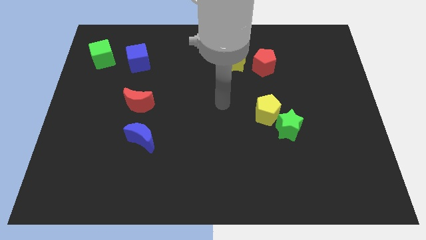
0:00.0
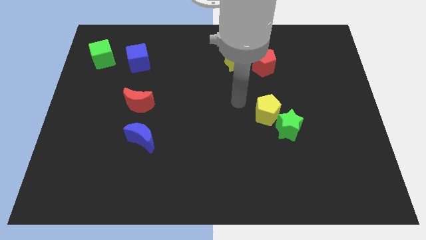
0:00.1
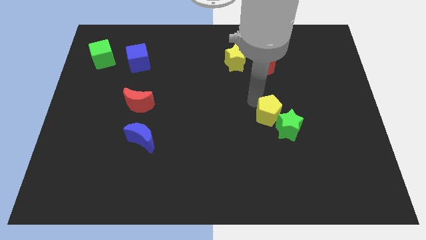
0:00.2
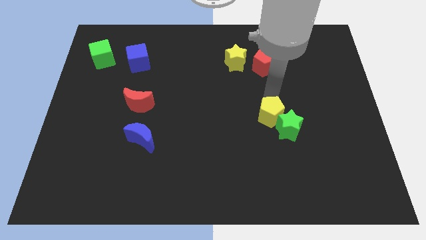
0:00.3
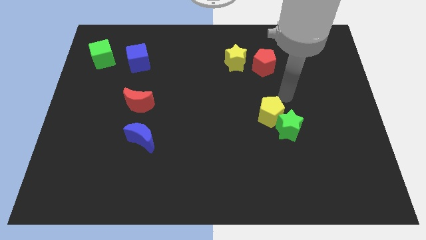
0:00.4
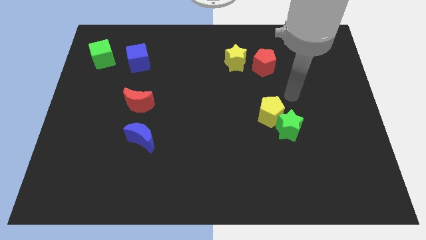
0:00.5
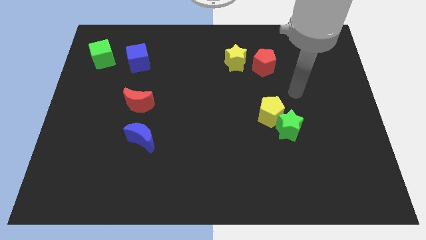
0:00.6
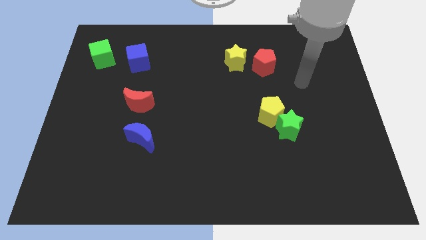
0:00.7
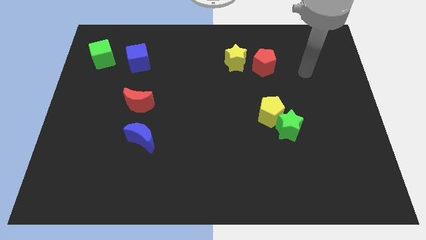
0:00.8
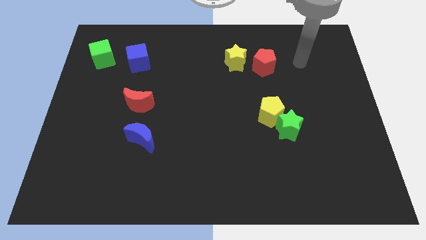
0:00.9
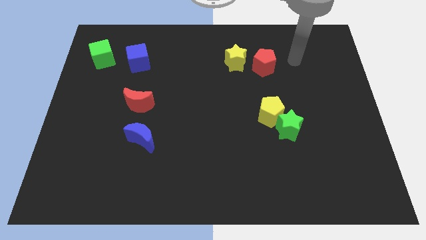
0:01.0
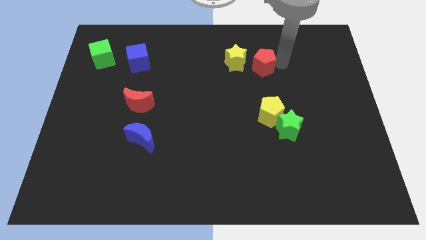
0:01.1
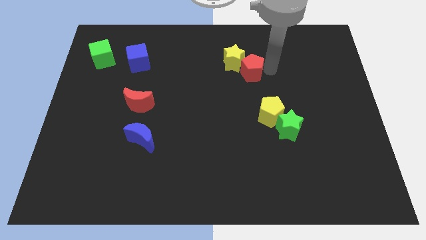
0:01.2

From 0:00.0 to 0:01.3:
move the arm towards the red pentagon

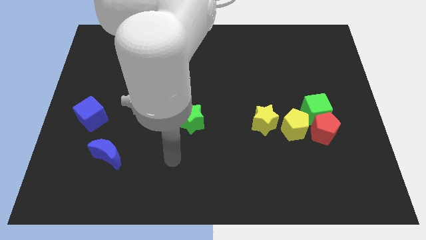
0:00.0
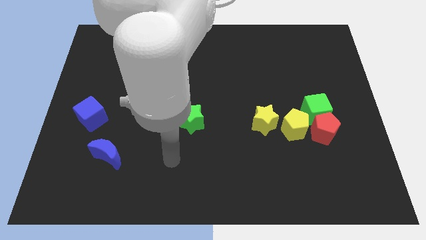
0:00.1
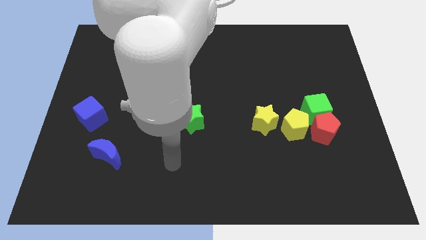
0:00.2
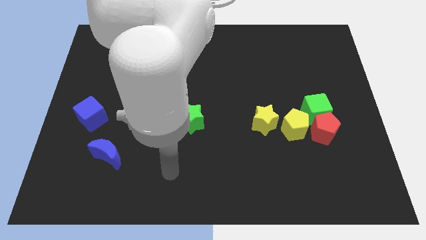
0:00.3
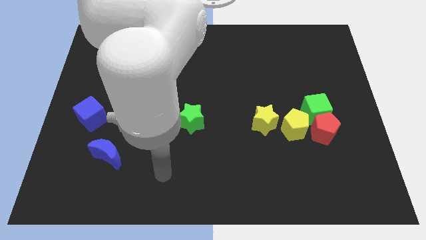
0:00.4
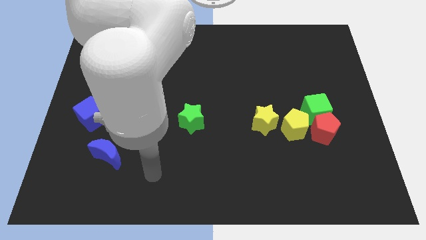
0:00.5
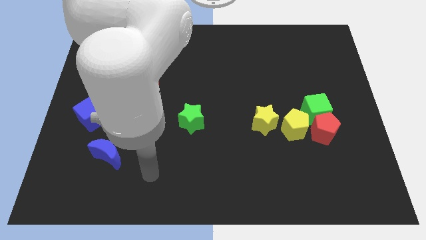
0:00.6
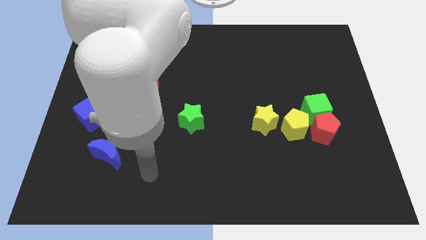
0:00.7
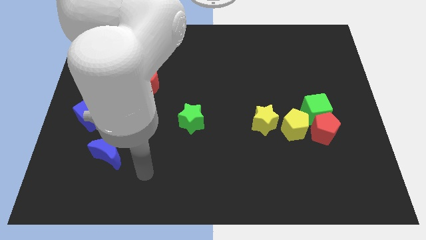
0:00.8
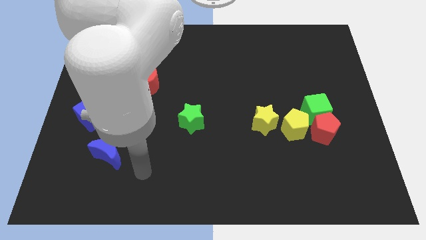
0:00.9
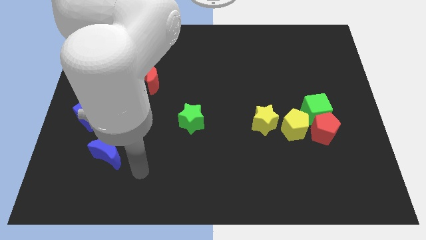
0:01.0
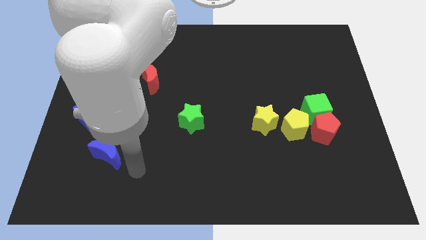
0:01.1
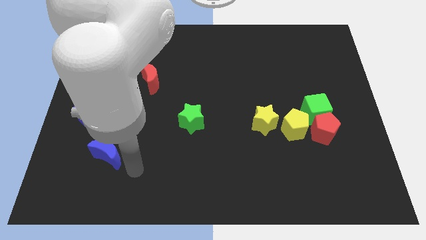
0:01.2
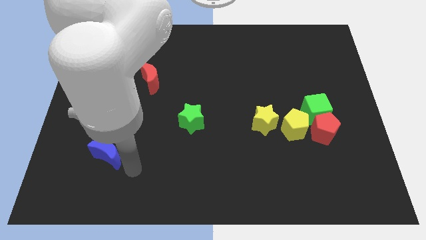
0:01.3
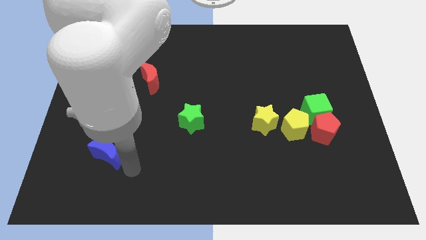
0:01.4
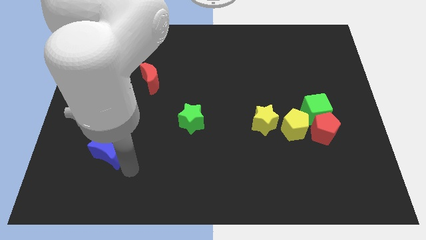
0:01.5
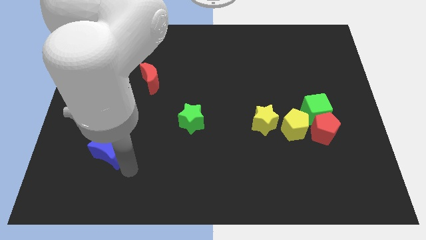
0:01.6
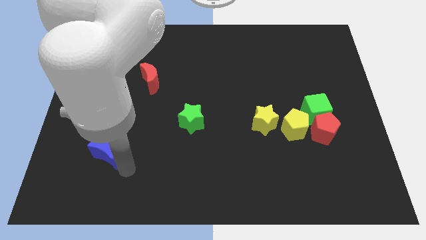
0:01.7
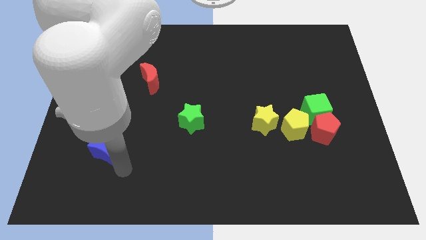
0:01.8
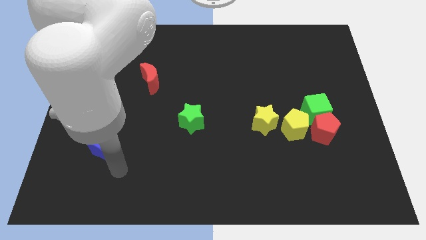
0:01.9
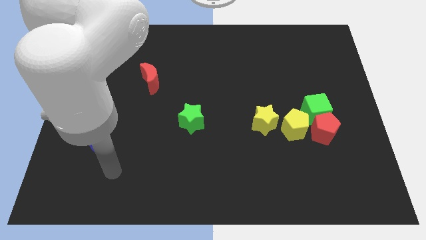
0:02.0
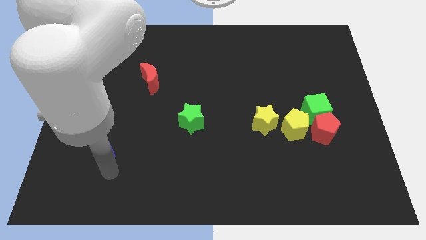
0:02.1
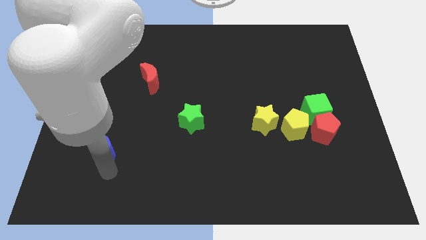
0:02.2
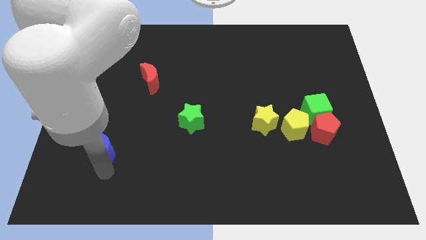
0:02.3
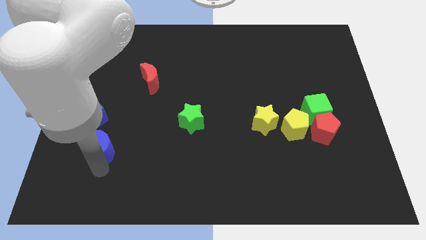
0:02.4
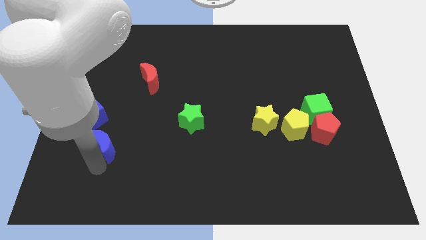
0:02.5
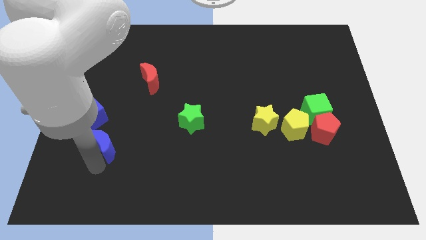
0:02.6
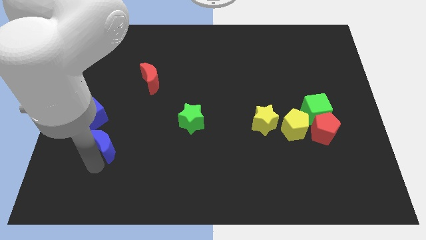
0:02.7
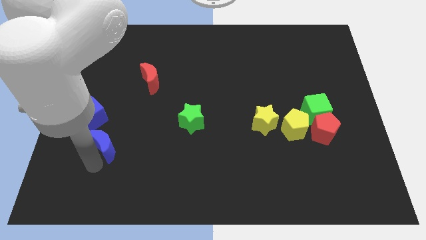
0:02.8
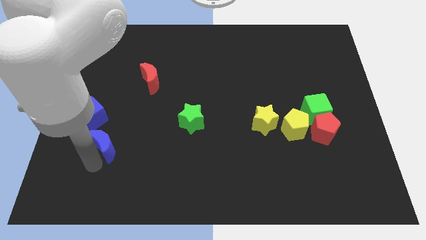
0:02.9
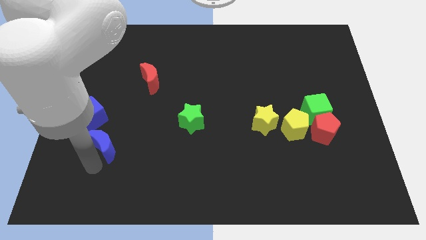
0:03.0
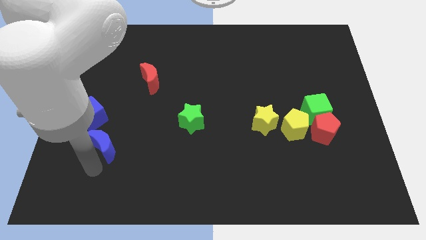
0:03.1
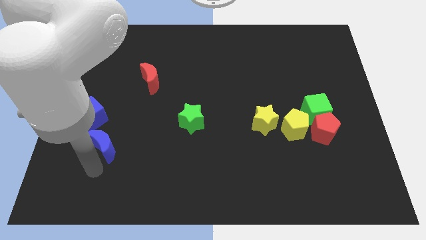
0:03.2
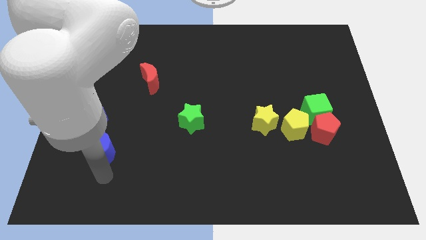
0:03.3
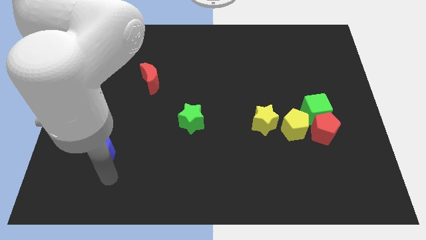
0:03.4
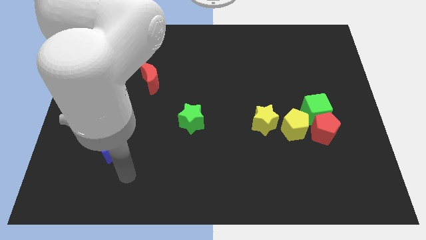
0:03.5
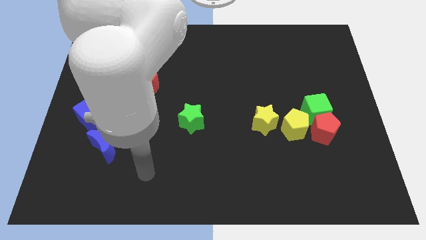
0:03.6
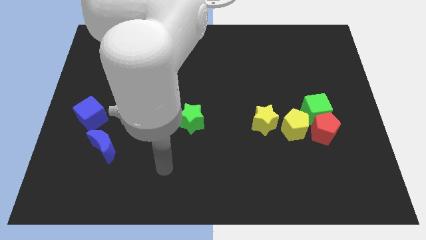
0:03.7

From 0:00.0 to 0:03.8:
move the blue moon closely below the blue cube

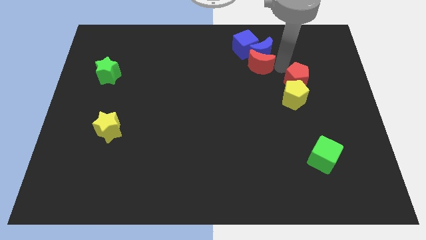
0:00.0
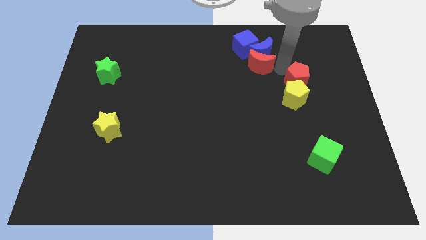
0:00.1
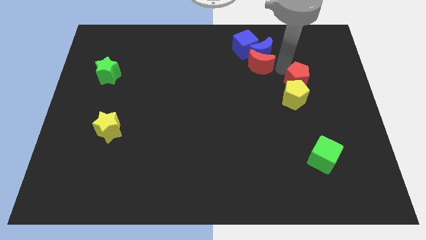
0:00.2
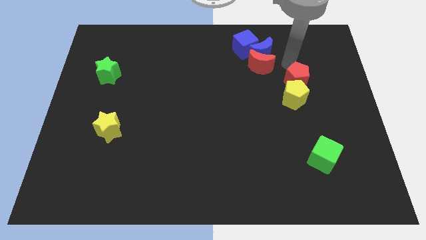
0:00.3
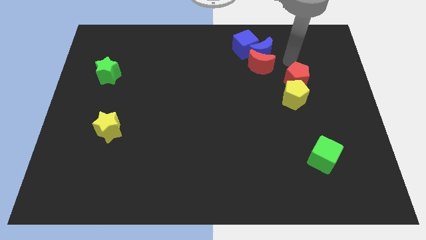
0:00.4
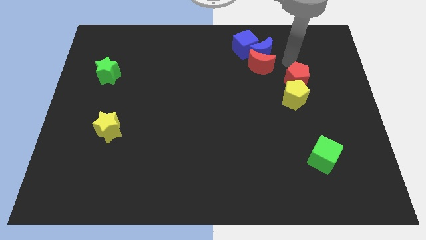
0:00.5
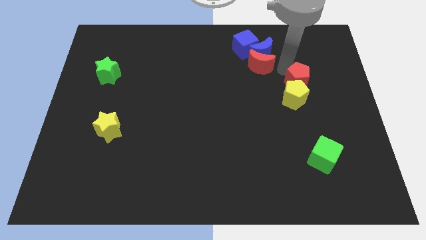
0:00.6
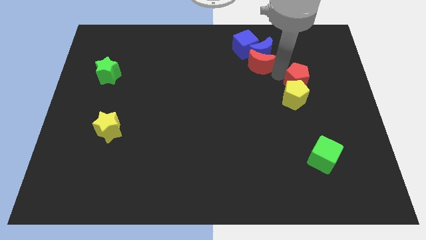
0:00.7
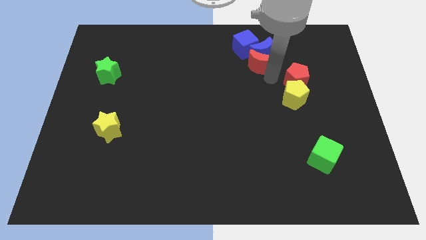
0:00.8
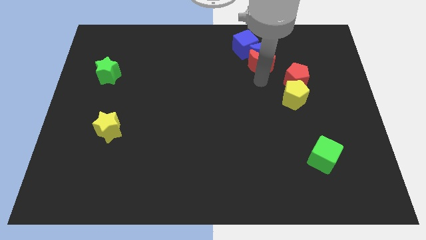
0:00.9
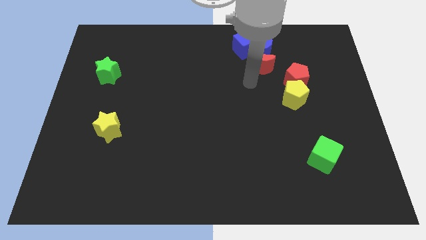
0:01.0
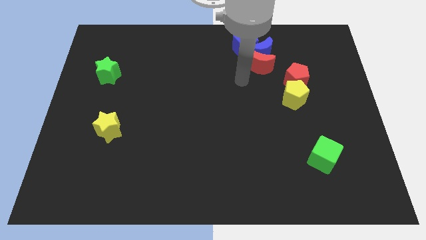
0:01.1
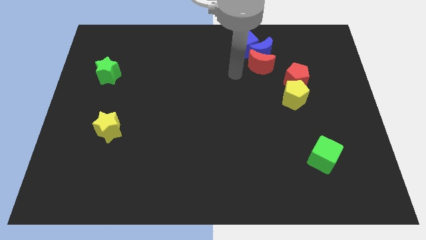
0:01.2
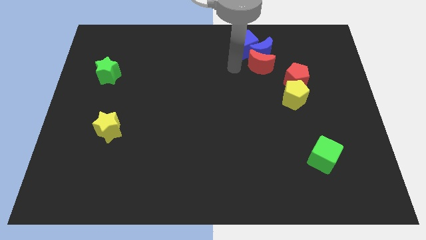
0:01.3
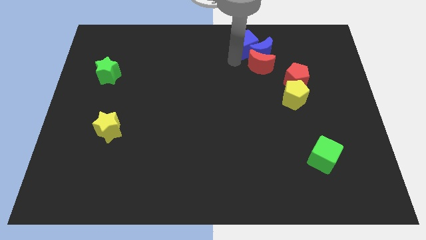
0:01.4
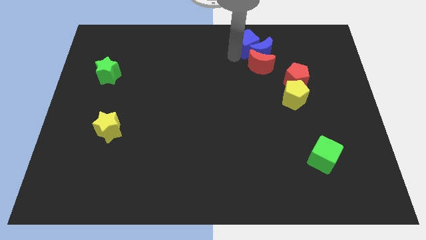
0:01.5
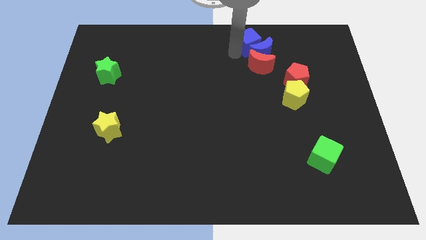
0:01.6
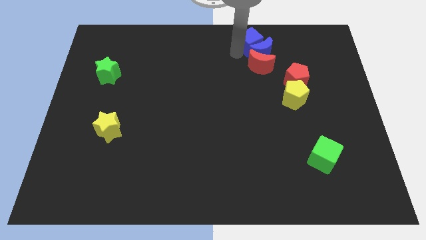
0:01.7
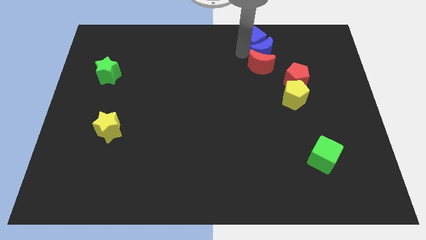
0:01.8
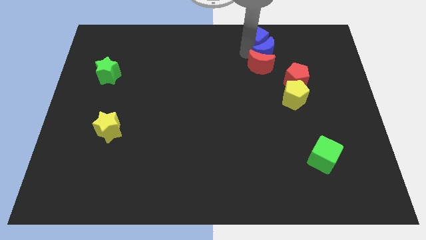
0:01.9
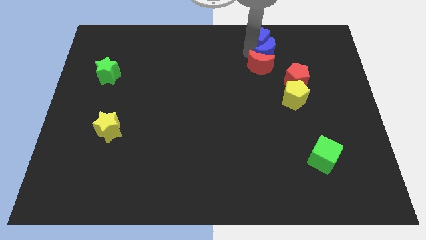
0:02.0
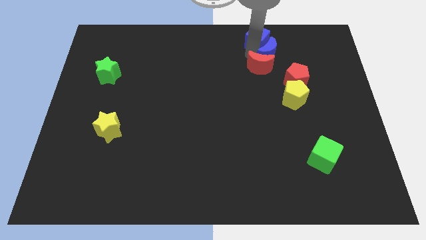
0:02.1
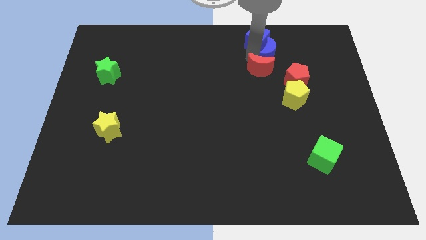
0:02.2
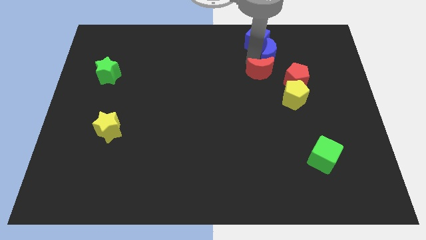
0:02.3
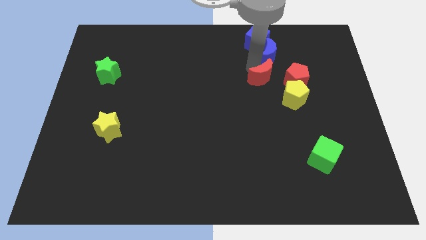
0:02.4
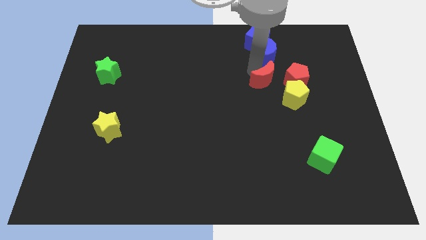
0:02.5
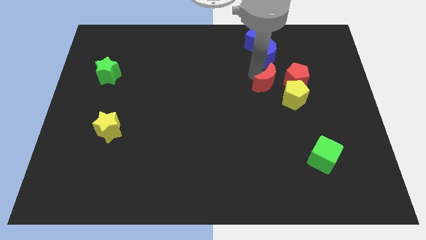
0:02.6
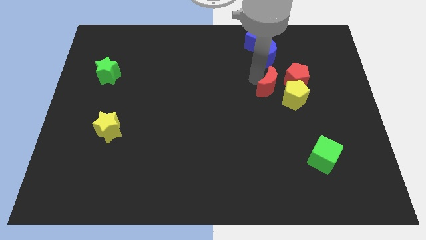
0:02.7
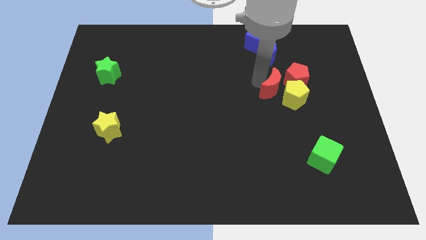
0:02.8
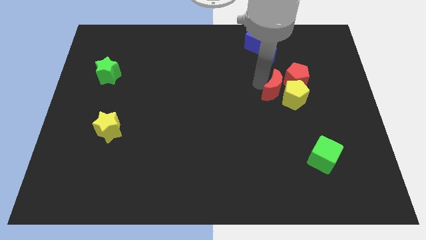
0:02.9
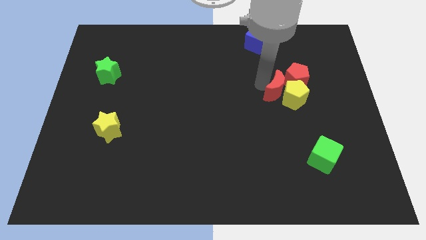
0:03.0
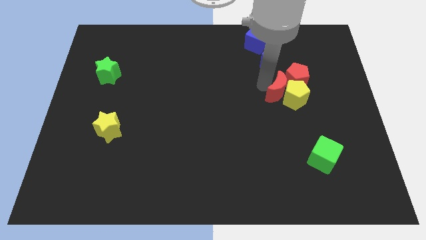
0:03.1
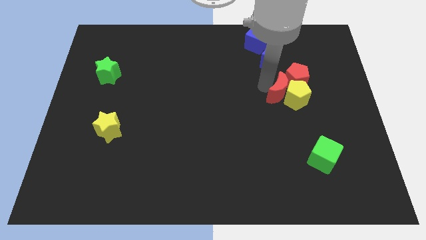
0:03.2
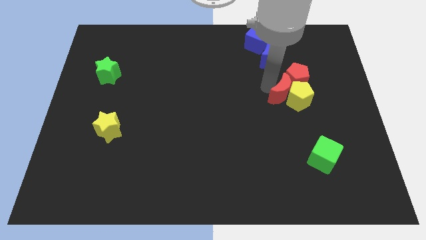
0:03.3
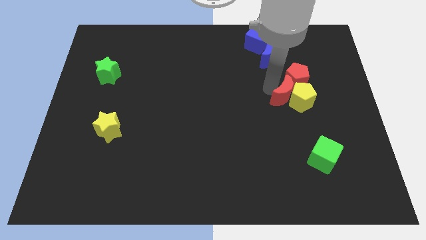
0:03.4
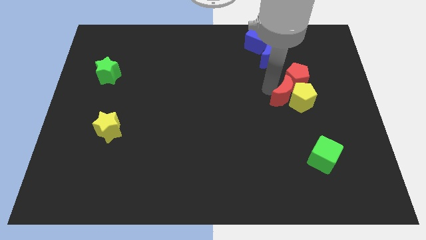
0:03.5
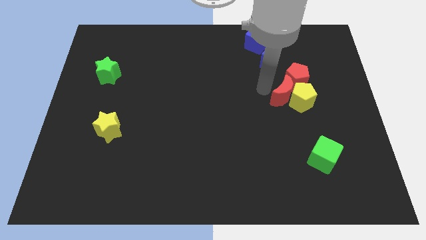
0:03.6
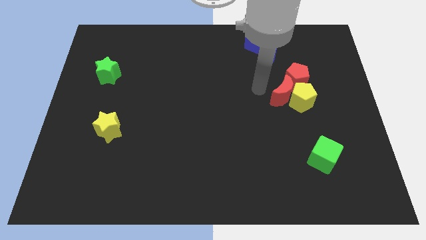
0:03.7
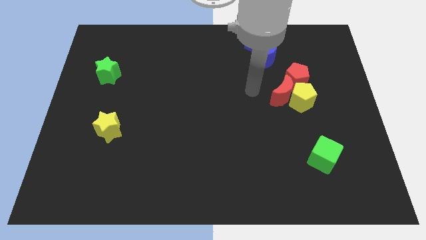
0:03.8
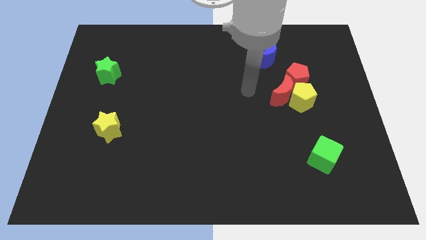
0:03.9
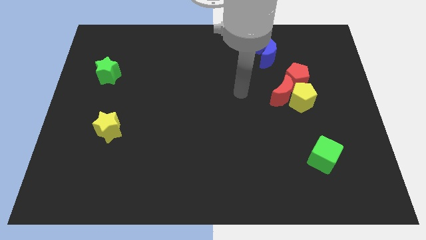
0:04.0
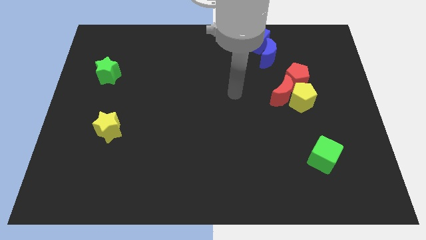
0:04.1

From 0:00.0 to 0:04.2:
move the red moon towards the left of the red pentagon
